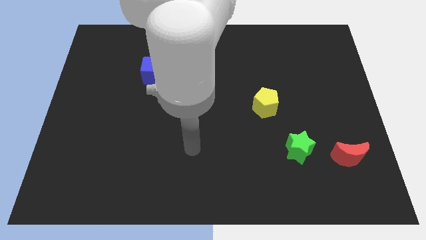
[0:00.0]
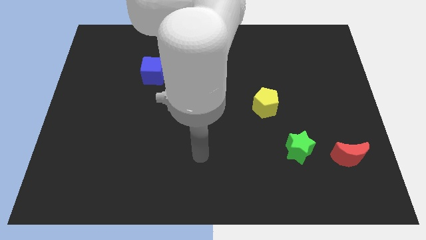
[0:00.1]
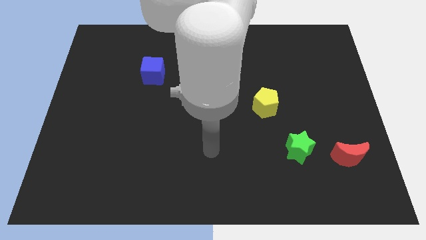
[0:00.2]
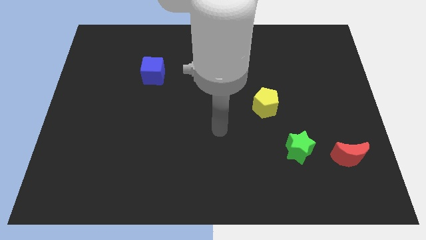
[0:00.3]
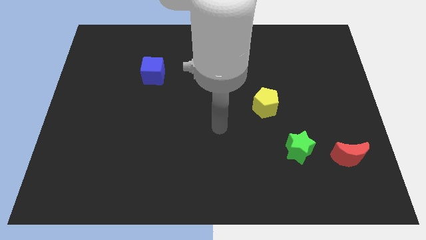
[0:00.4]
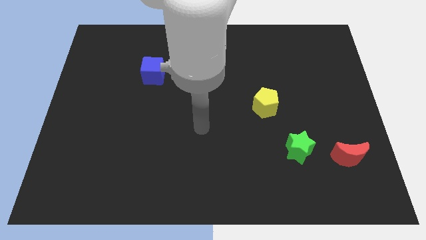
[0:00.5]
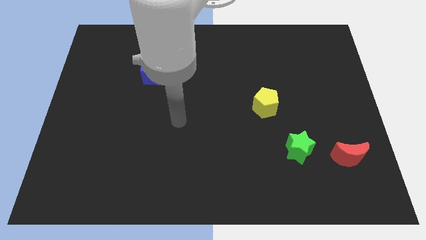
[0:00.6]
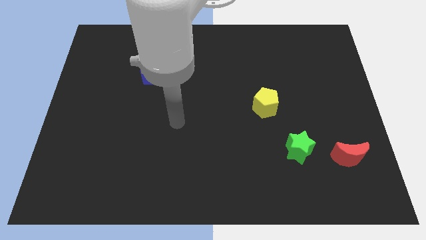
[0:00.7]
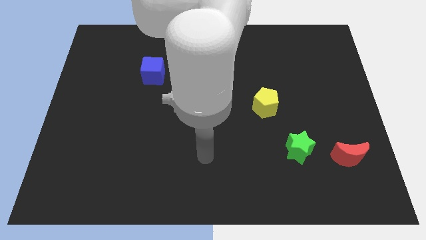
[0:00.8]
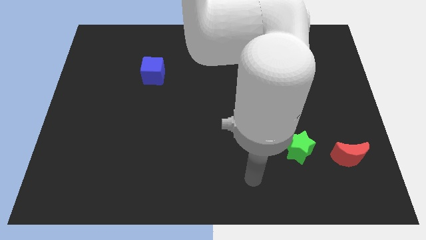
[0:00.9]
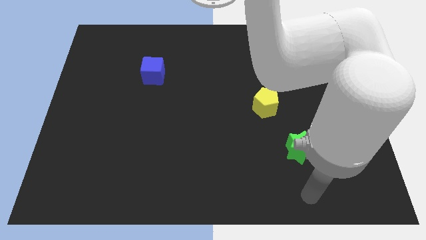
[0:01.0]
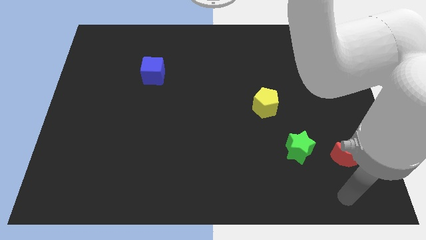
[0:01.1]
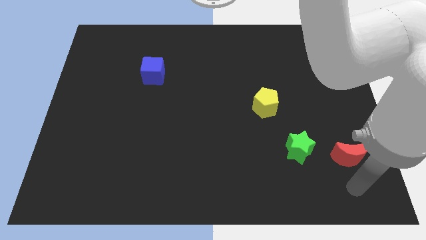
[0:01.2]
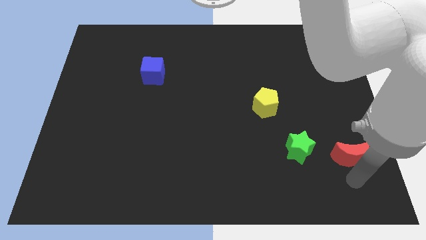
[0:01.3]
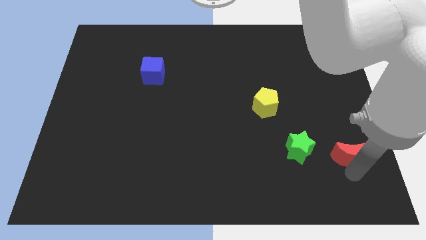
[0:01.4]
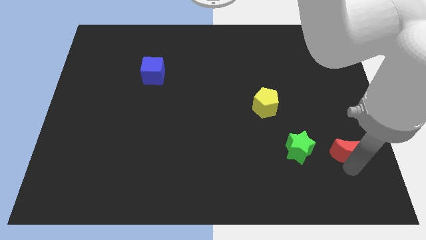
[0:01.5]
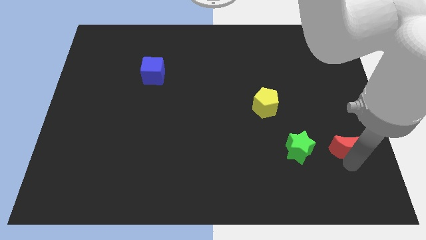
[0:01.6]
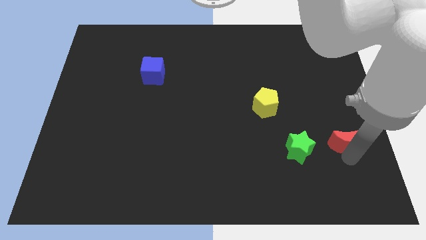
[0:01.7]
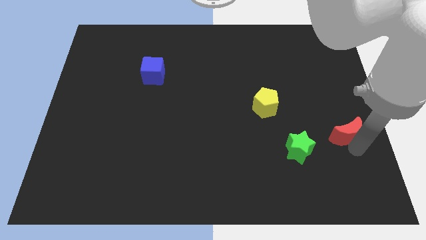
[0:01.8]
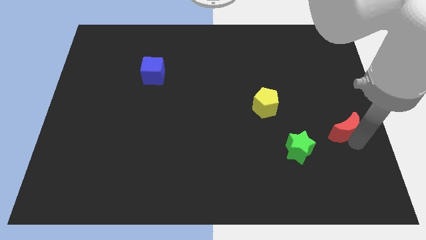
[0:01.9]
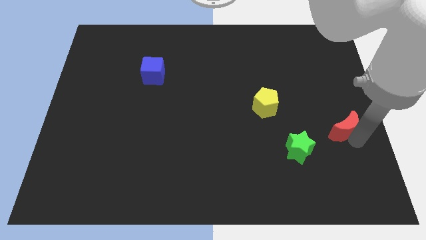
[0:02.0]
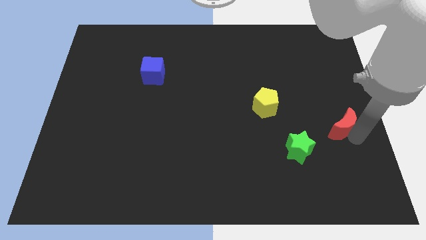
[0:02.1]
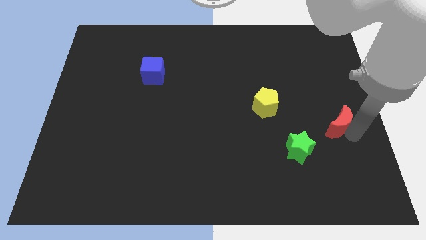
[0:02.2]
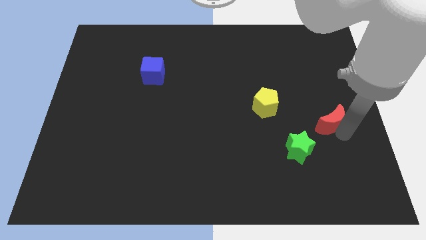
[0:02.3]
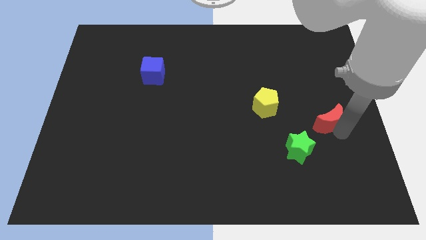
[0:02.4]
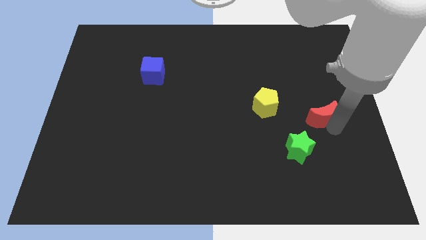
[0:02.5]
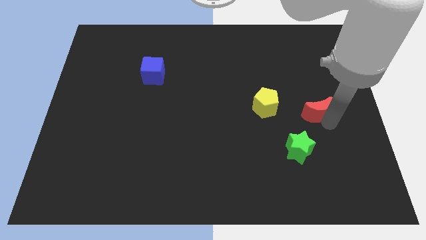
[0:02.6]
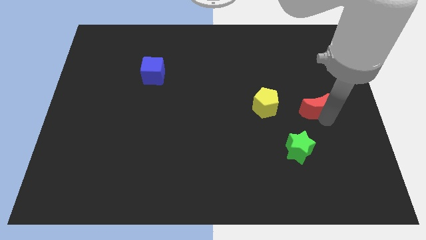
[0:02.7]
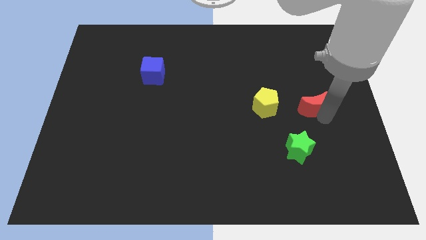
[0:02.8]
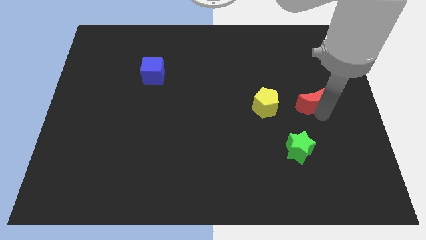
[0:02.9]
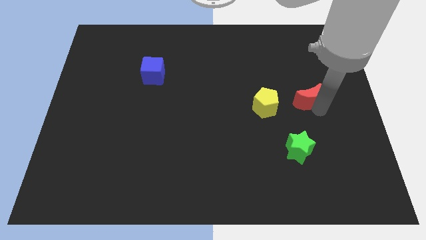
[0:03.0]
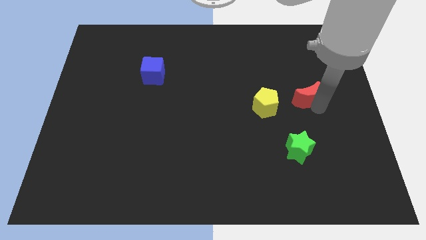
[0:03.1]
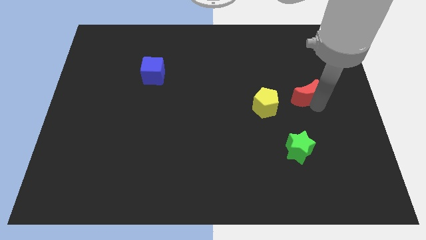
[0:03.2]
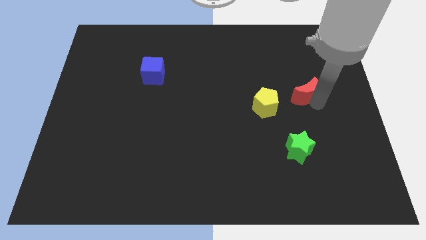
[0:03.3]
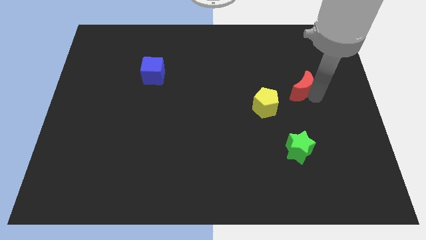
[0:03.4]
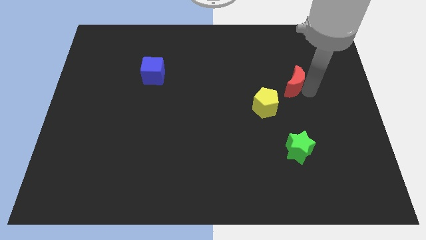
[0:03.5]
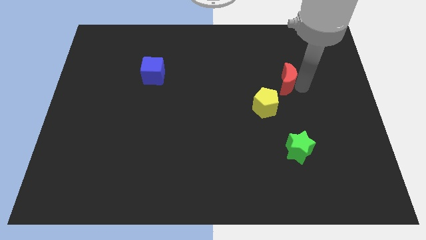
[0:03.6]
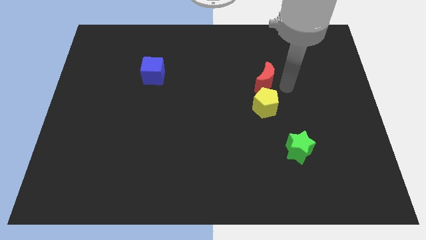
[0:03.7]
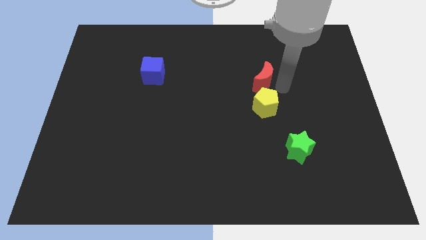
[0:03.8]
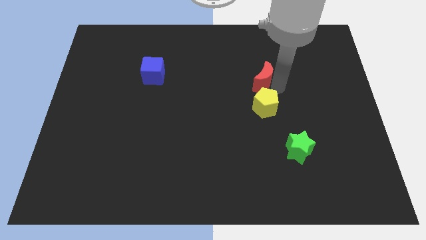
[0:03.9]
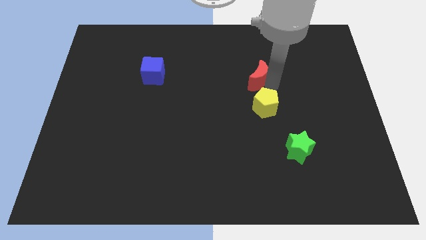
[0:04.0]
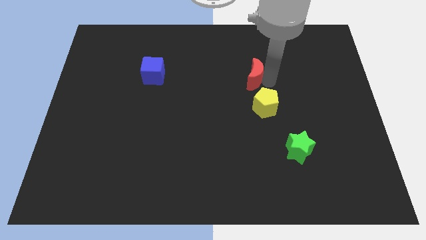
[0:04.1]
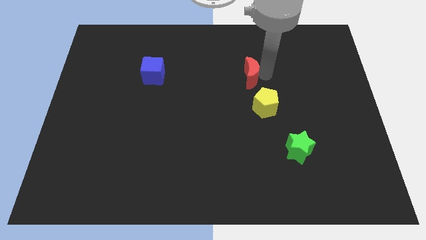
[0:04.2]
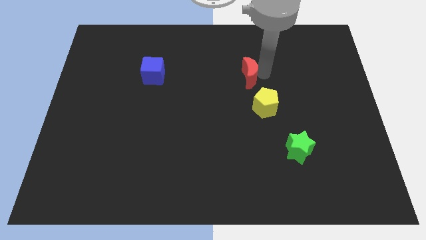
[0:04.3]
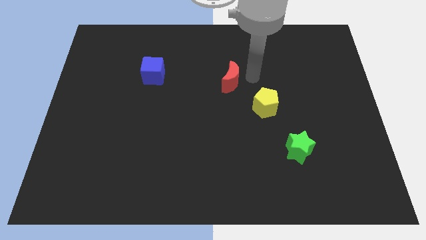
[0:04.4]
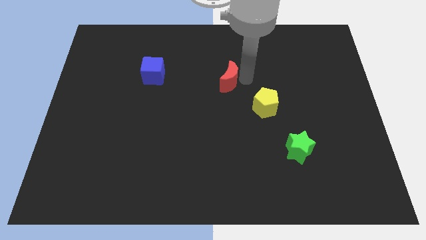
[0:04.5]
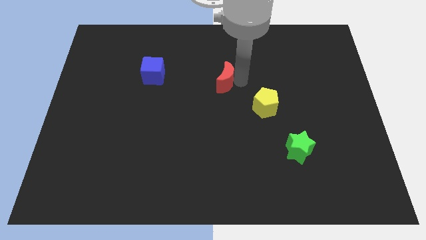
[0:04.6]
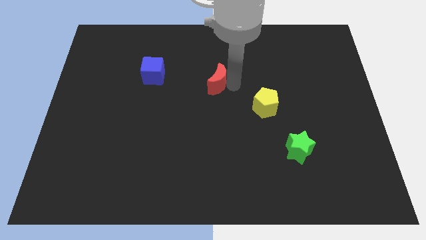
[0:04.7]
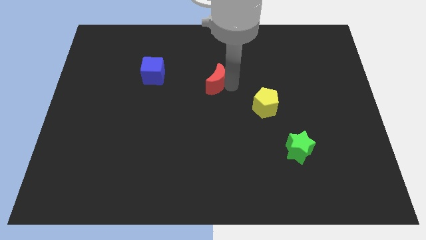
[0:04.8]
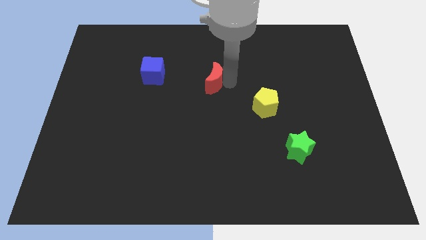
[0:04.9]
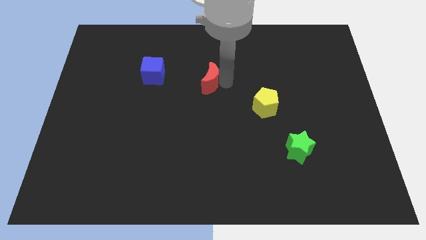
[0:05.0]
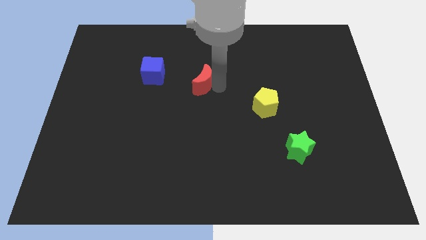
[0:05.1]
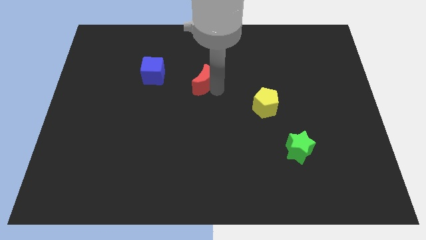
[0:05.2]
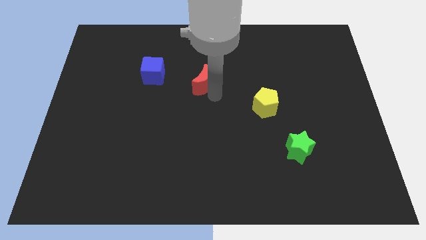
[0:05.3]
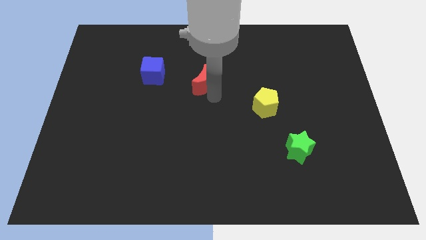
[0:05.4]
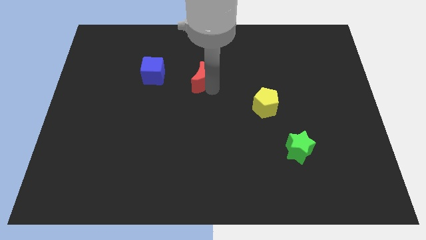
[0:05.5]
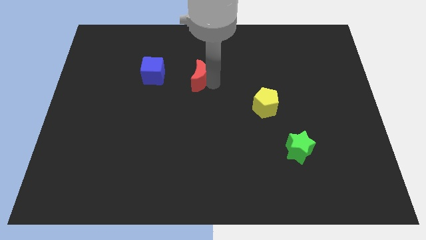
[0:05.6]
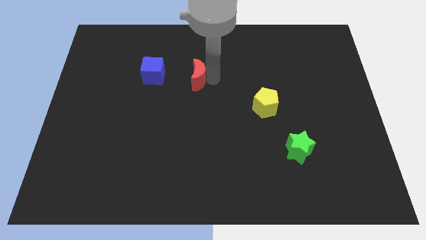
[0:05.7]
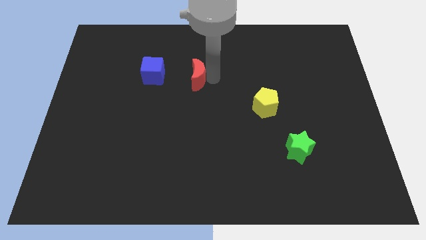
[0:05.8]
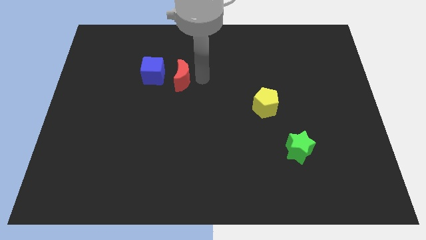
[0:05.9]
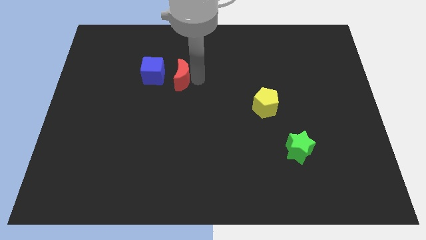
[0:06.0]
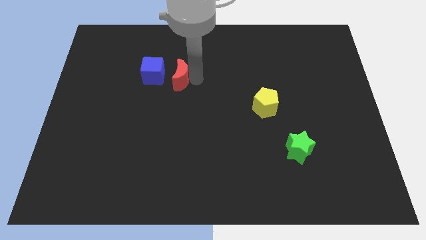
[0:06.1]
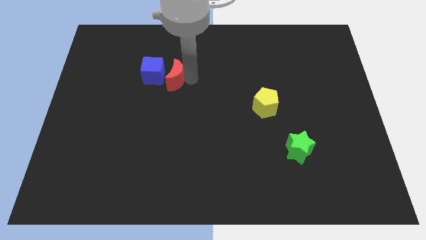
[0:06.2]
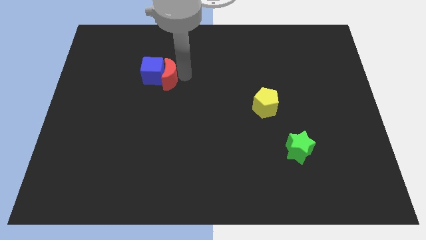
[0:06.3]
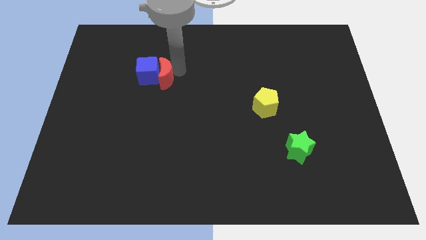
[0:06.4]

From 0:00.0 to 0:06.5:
slide the moon close to the blue cube

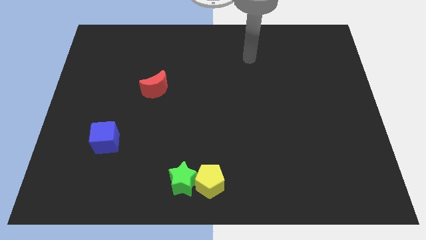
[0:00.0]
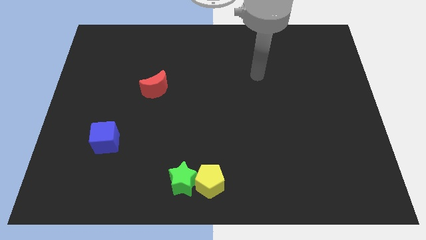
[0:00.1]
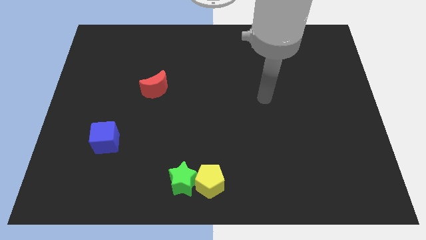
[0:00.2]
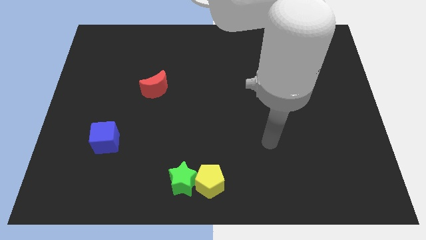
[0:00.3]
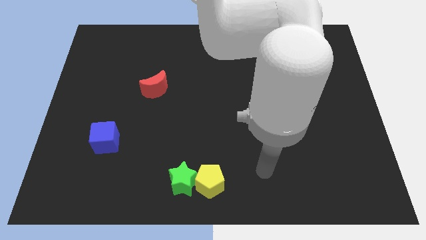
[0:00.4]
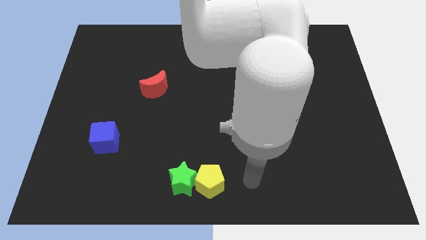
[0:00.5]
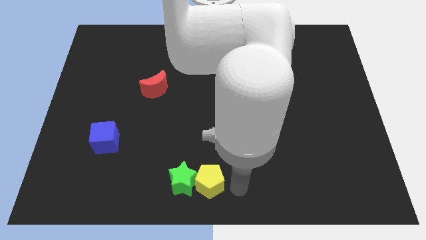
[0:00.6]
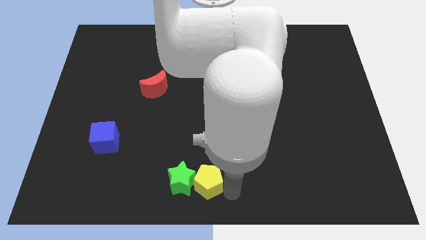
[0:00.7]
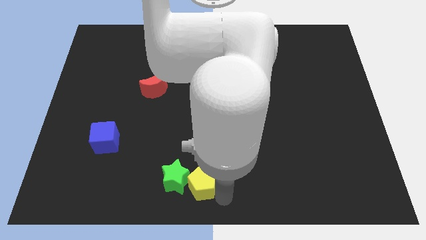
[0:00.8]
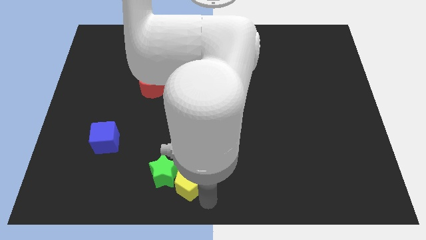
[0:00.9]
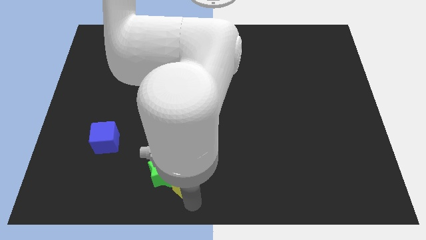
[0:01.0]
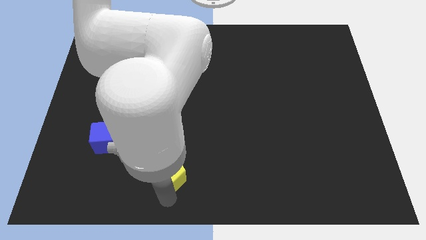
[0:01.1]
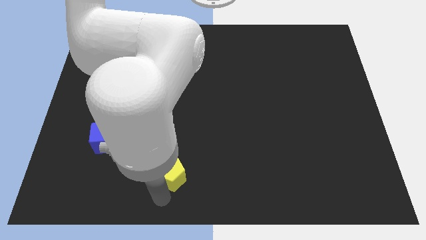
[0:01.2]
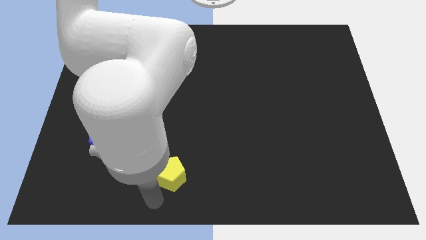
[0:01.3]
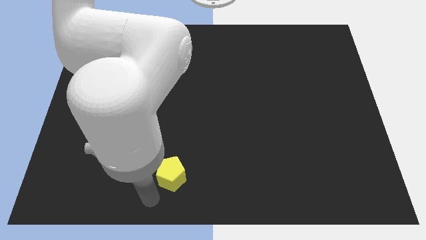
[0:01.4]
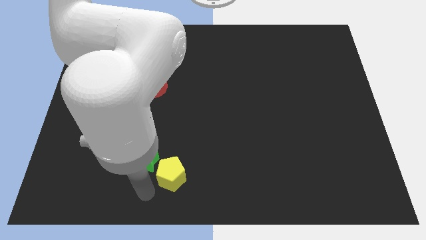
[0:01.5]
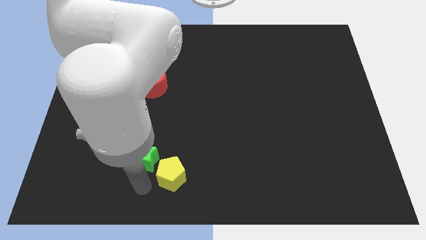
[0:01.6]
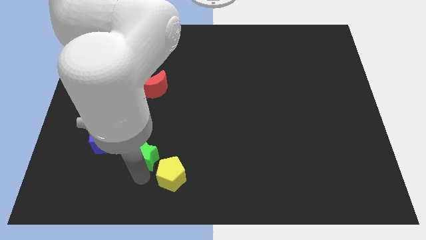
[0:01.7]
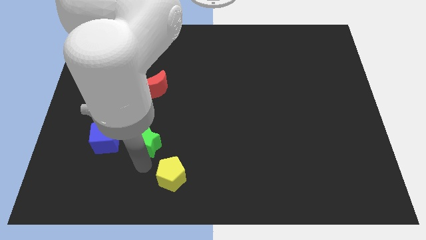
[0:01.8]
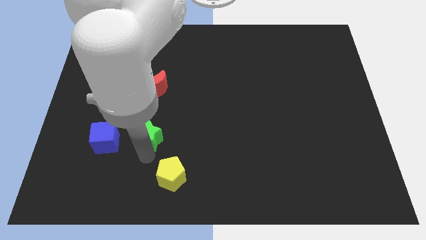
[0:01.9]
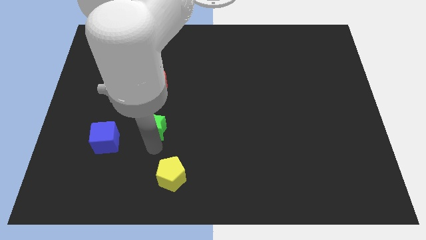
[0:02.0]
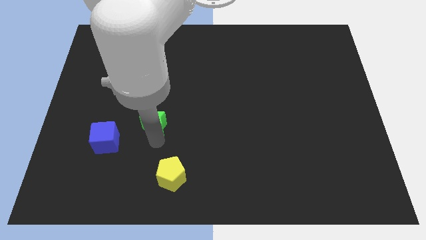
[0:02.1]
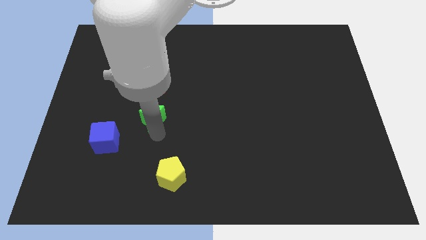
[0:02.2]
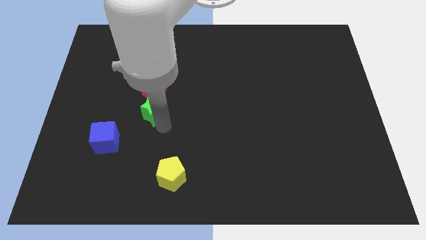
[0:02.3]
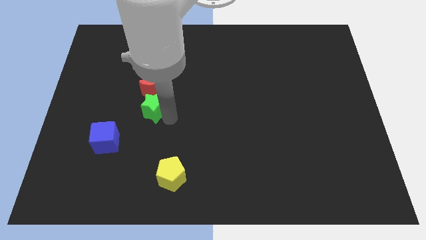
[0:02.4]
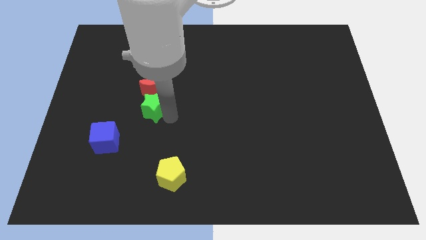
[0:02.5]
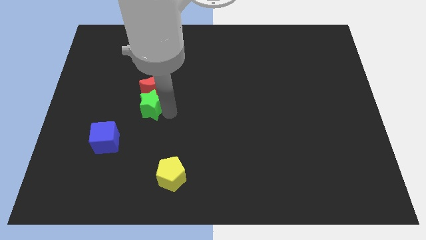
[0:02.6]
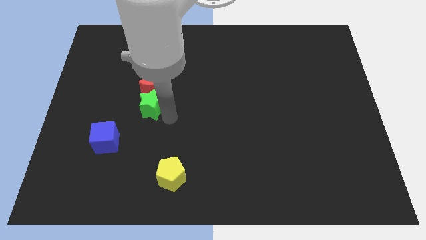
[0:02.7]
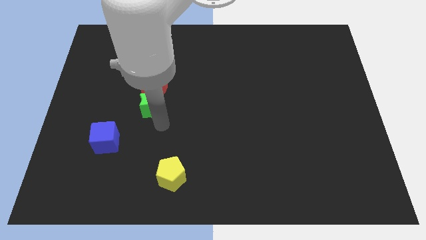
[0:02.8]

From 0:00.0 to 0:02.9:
move the green block close to the red block
